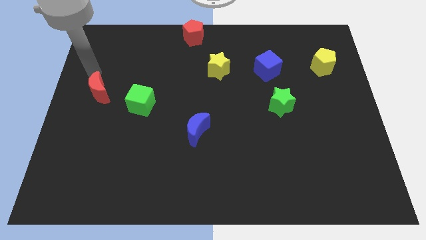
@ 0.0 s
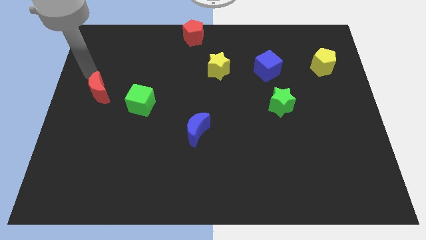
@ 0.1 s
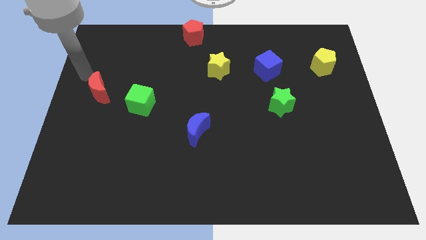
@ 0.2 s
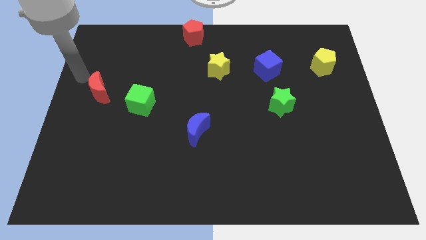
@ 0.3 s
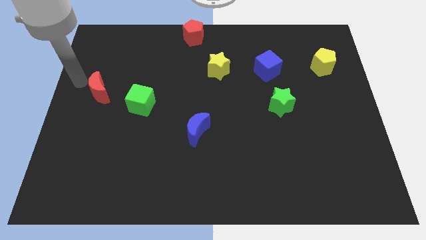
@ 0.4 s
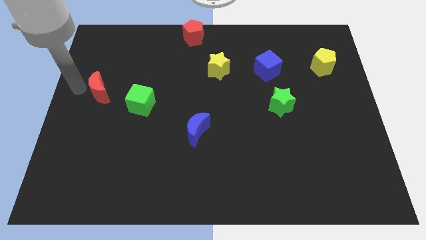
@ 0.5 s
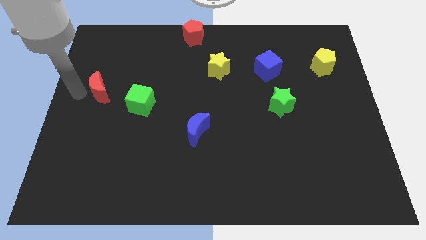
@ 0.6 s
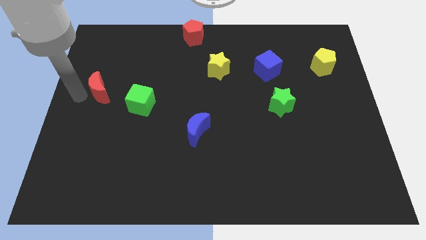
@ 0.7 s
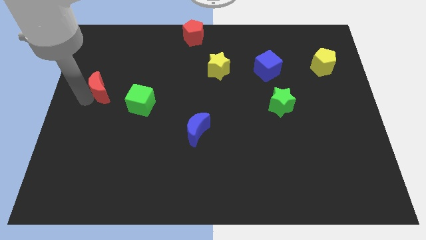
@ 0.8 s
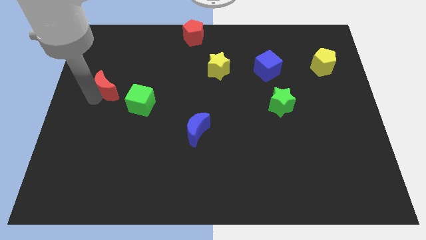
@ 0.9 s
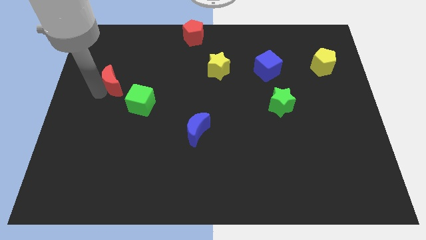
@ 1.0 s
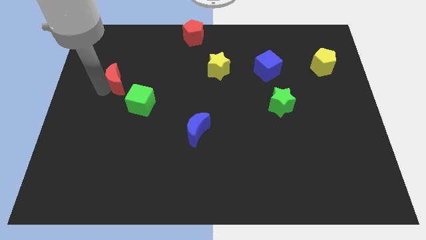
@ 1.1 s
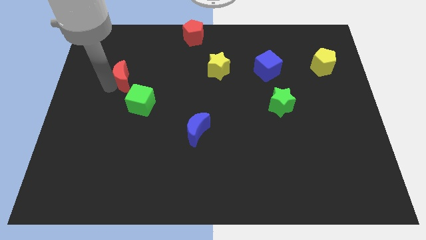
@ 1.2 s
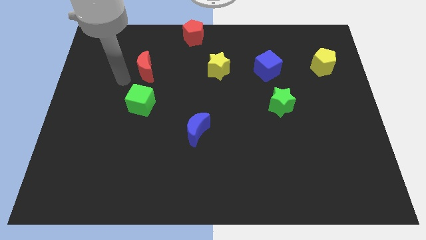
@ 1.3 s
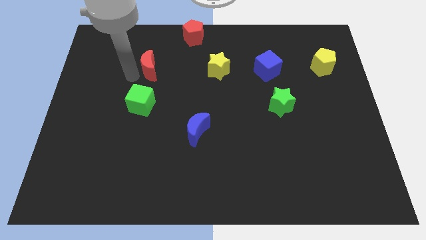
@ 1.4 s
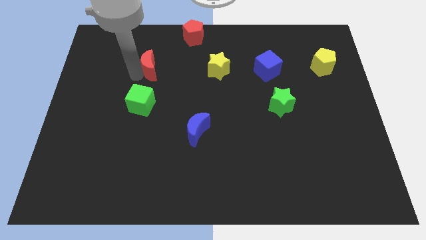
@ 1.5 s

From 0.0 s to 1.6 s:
place the red moon to the top of green cube

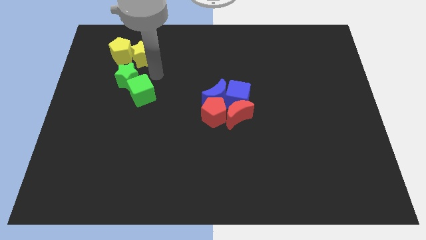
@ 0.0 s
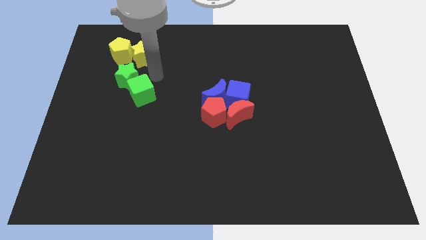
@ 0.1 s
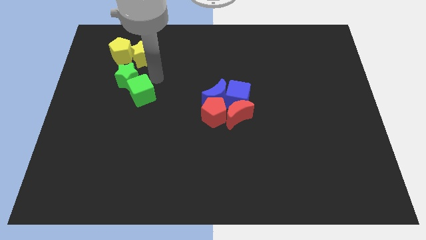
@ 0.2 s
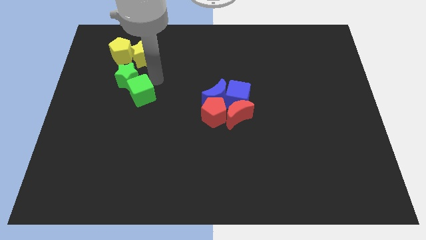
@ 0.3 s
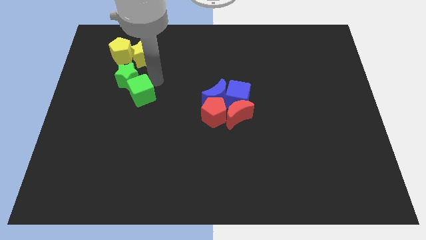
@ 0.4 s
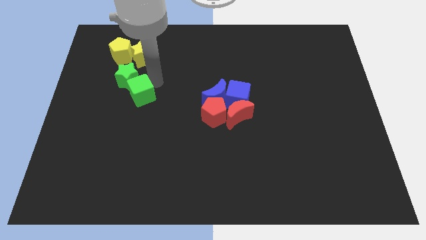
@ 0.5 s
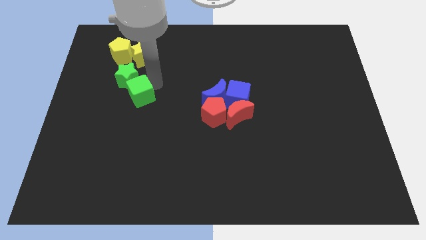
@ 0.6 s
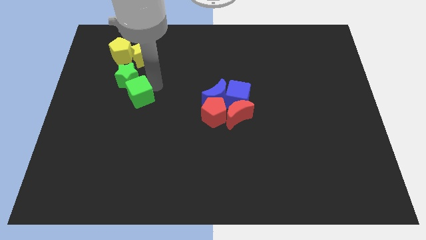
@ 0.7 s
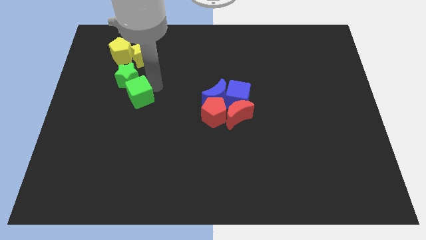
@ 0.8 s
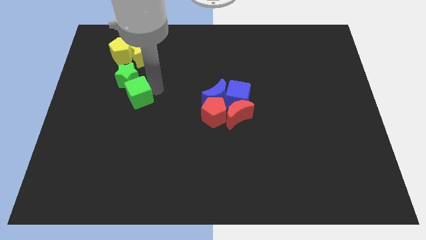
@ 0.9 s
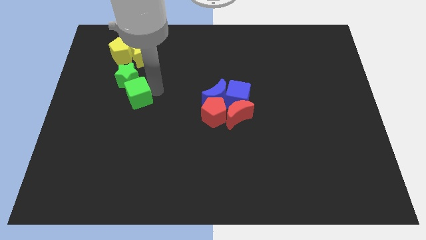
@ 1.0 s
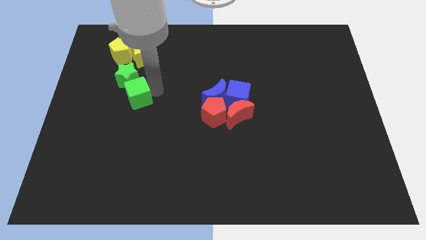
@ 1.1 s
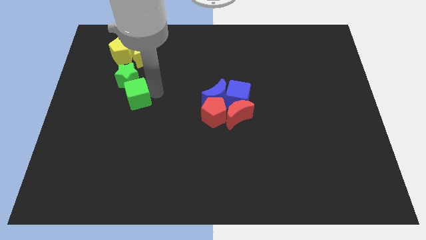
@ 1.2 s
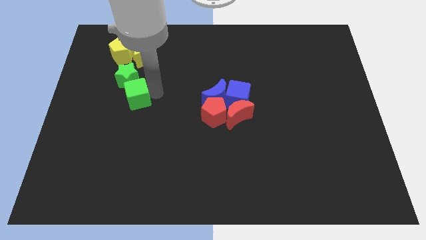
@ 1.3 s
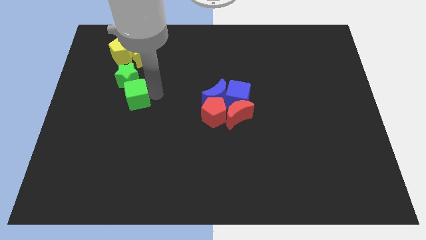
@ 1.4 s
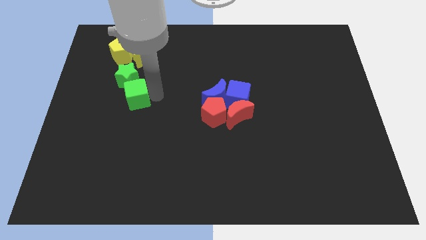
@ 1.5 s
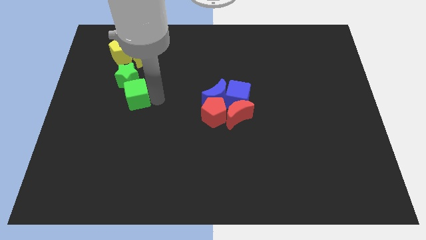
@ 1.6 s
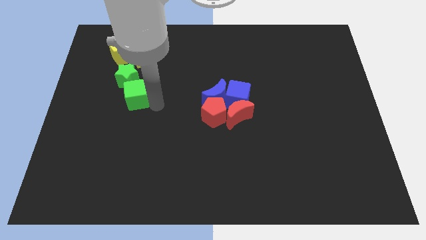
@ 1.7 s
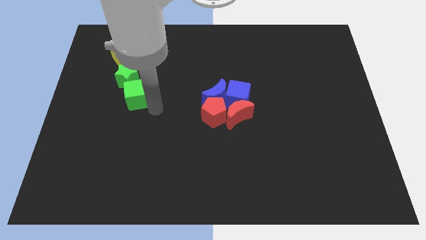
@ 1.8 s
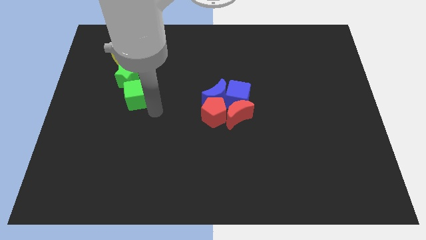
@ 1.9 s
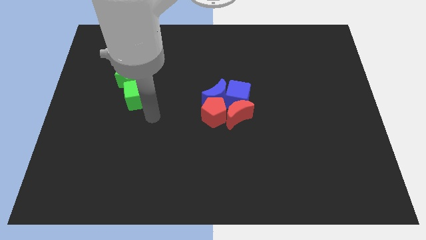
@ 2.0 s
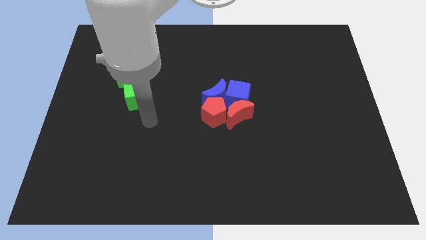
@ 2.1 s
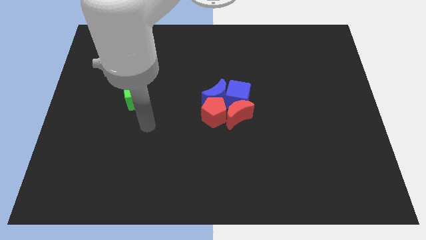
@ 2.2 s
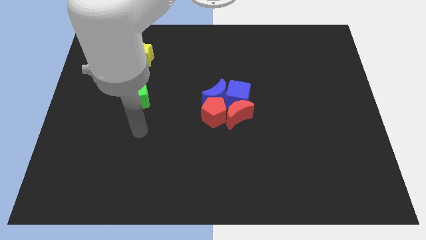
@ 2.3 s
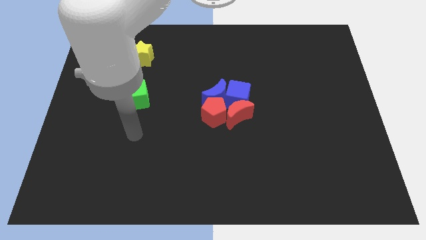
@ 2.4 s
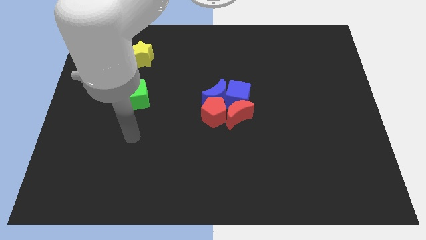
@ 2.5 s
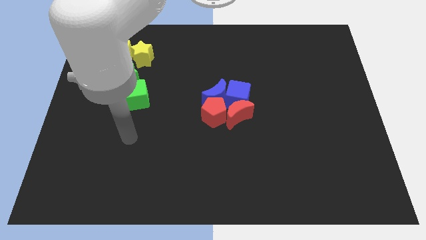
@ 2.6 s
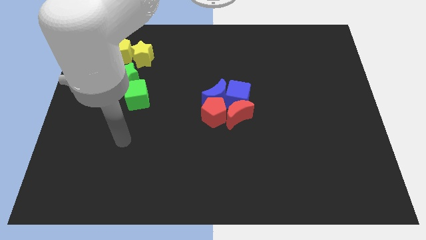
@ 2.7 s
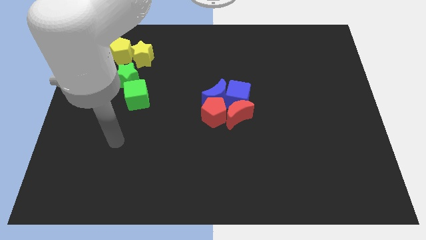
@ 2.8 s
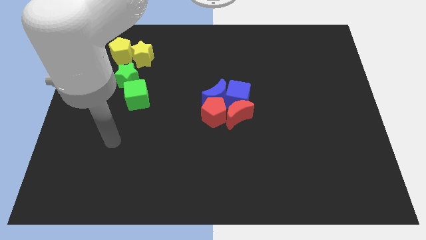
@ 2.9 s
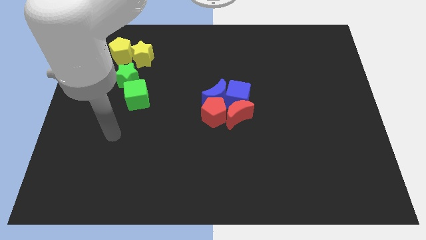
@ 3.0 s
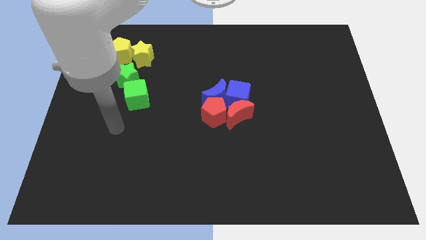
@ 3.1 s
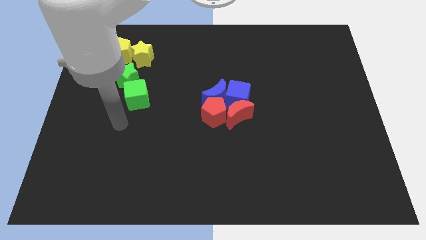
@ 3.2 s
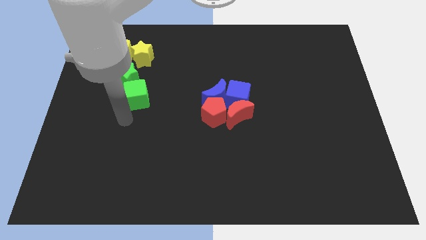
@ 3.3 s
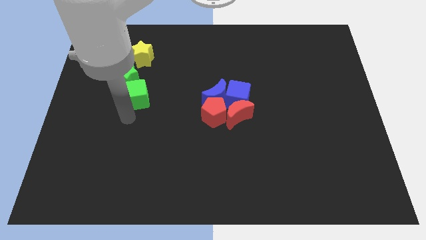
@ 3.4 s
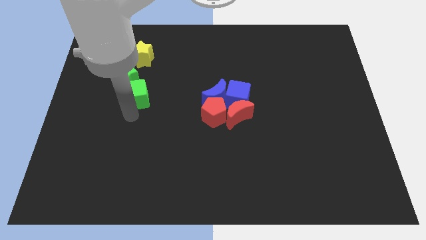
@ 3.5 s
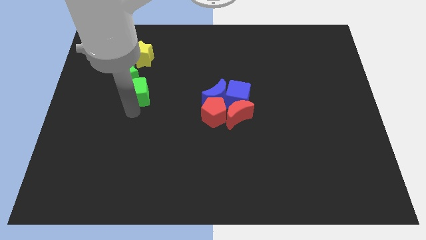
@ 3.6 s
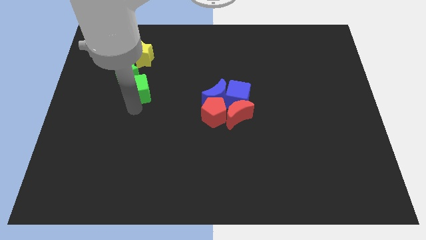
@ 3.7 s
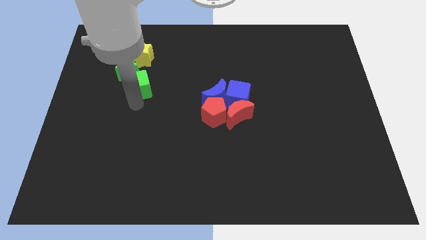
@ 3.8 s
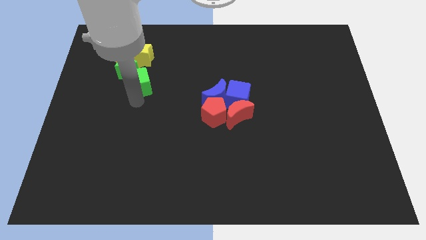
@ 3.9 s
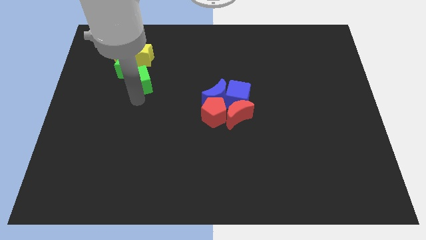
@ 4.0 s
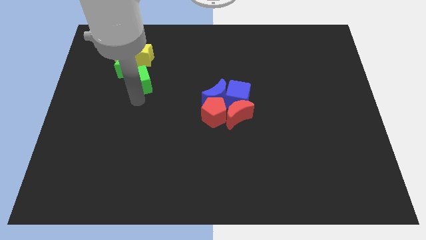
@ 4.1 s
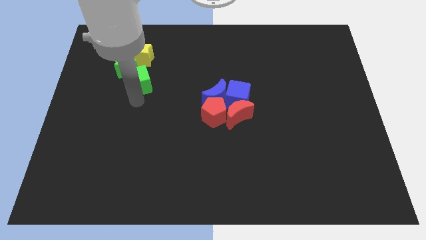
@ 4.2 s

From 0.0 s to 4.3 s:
move the green cube below the green star

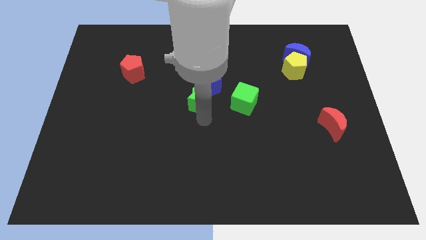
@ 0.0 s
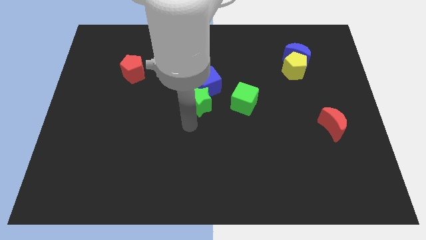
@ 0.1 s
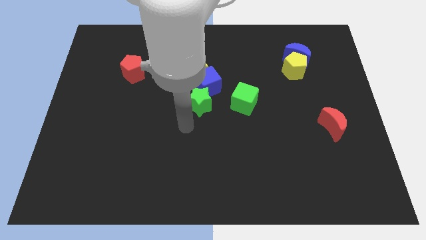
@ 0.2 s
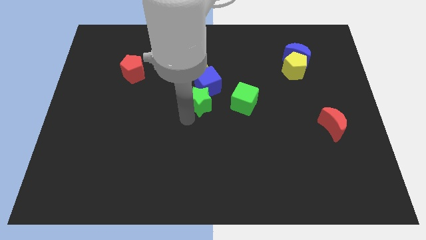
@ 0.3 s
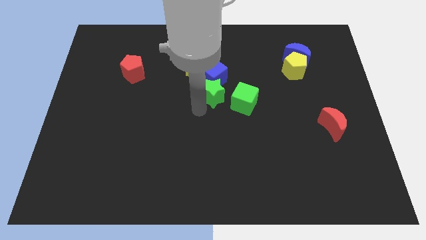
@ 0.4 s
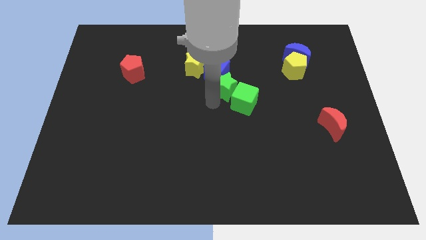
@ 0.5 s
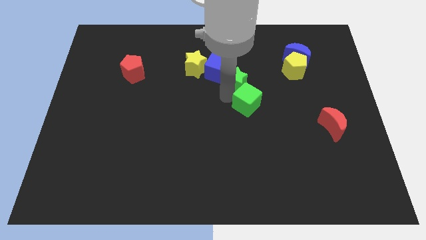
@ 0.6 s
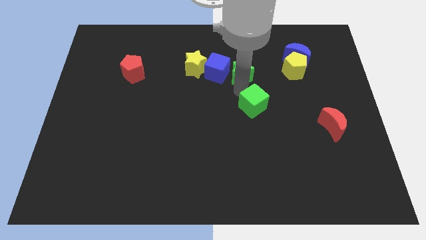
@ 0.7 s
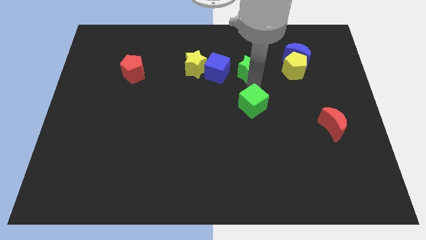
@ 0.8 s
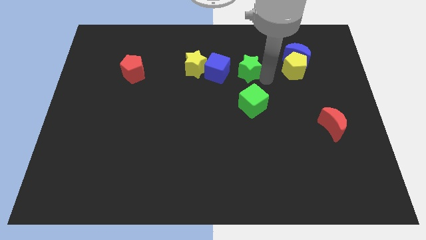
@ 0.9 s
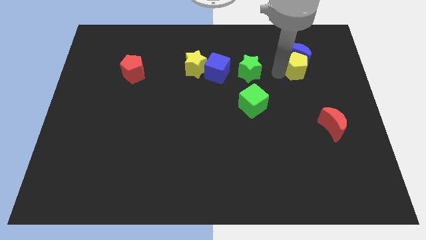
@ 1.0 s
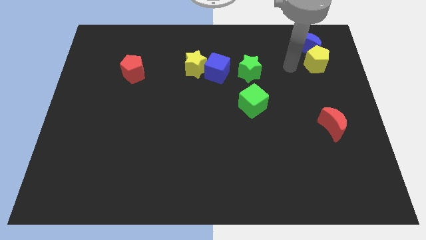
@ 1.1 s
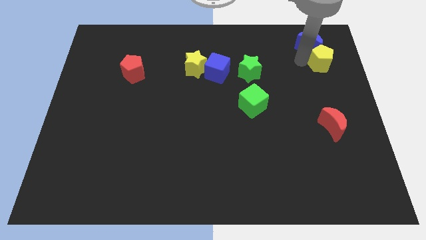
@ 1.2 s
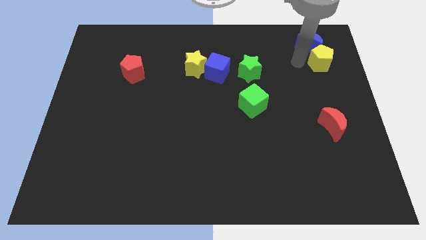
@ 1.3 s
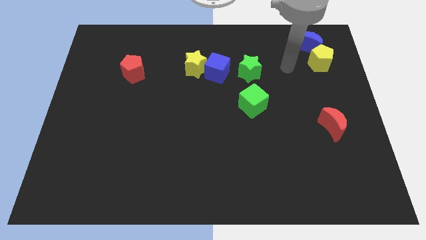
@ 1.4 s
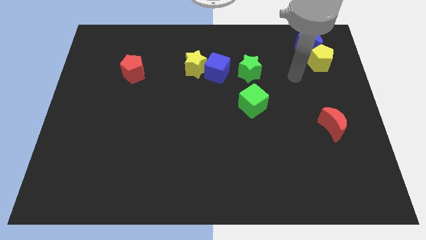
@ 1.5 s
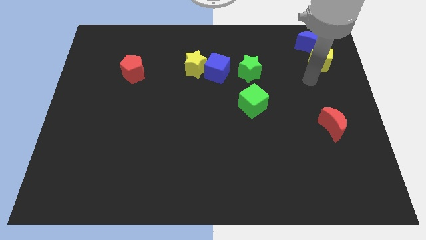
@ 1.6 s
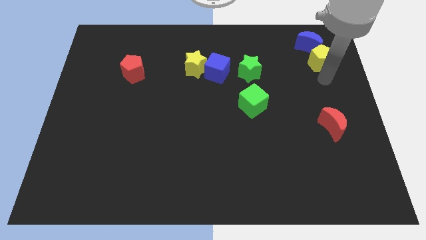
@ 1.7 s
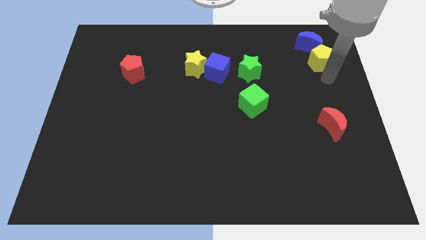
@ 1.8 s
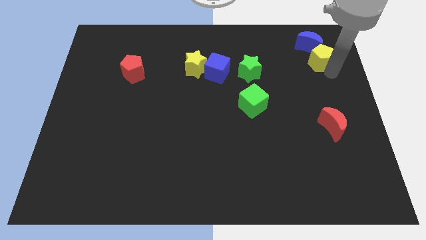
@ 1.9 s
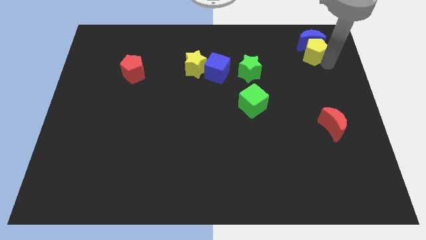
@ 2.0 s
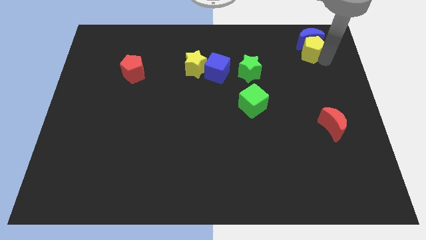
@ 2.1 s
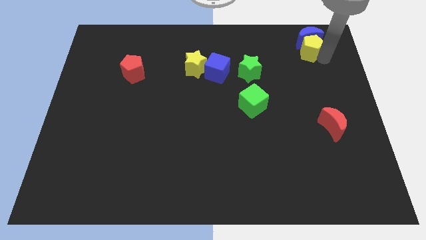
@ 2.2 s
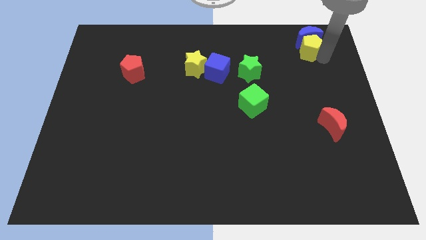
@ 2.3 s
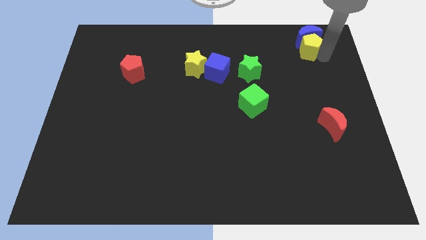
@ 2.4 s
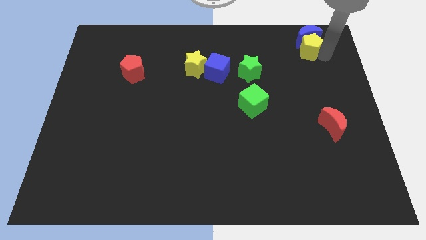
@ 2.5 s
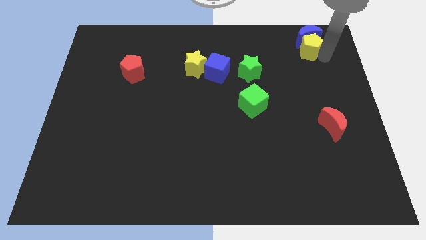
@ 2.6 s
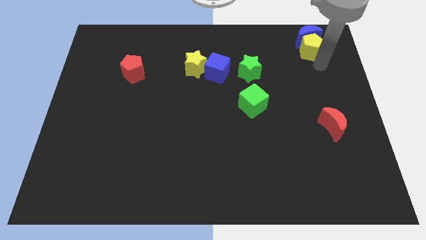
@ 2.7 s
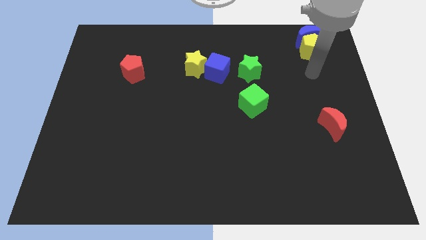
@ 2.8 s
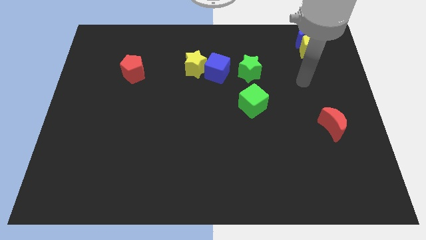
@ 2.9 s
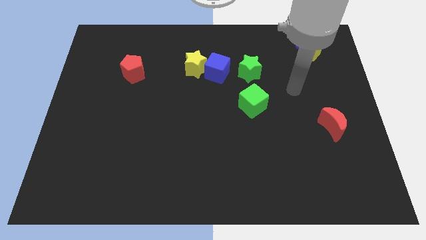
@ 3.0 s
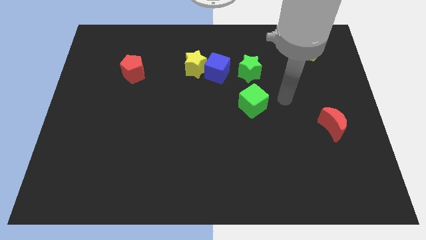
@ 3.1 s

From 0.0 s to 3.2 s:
separate green star from blue cube
